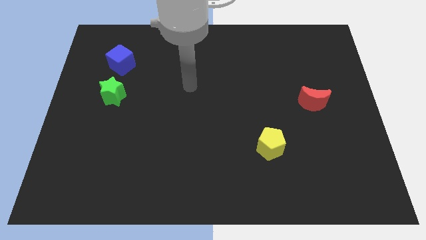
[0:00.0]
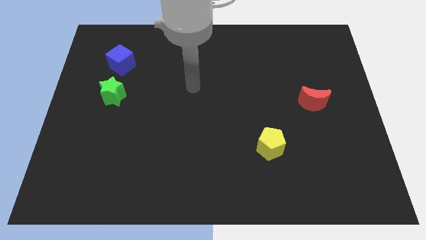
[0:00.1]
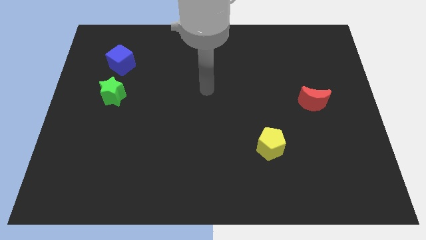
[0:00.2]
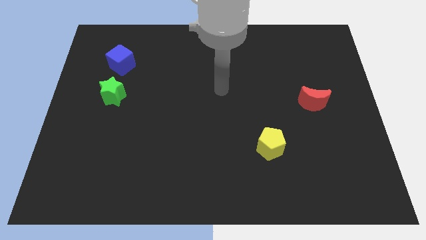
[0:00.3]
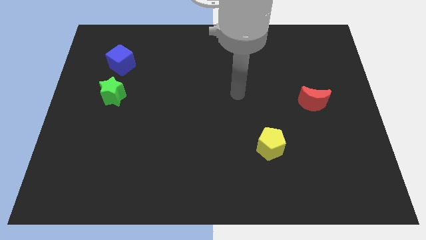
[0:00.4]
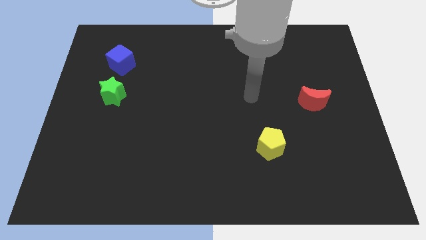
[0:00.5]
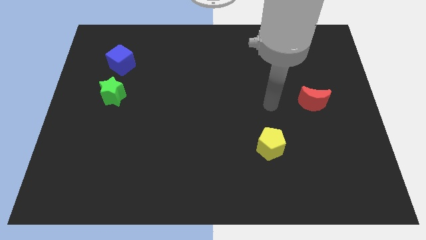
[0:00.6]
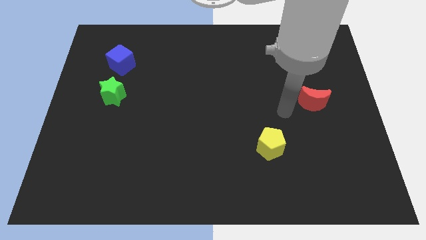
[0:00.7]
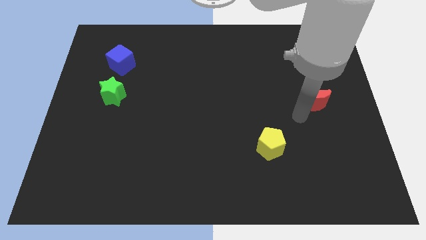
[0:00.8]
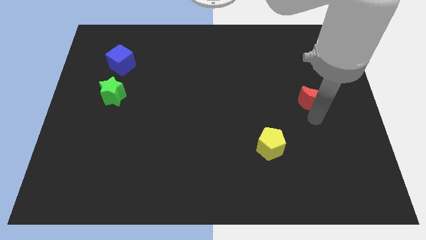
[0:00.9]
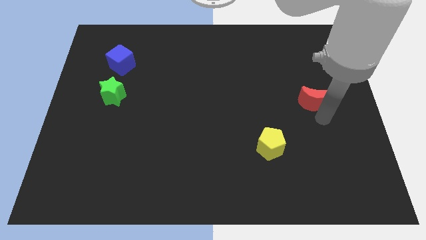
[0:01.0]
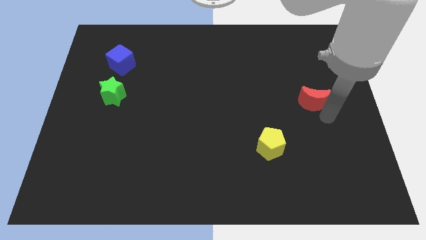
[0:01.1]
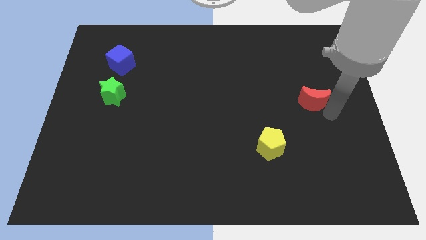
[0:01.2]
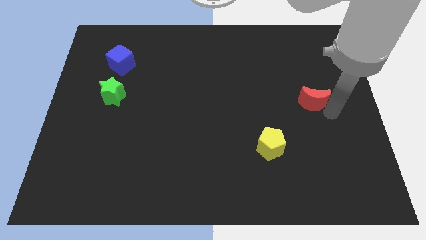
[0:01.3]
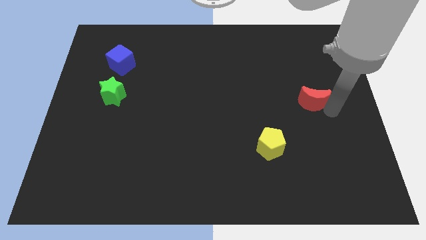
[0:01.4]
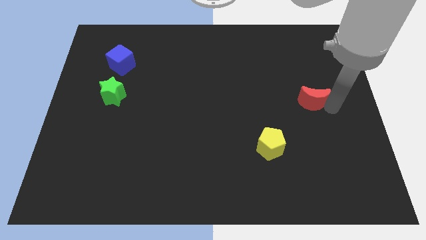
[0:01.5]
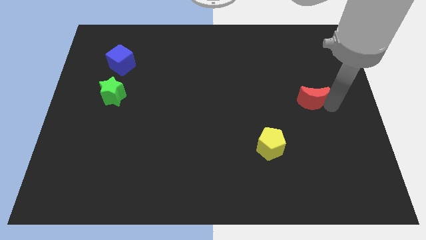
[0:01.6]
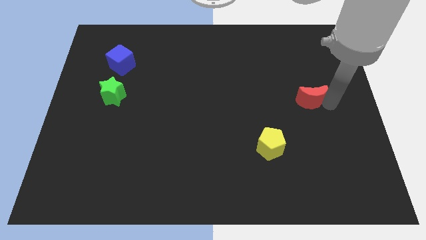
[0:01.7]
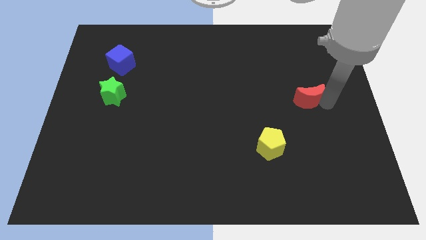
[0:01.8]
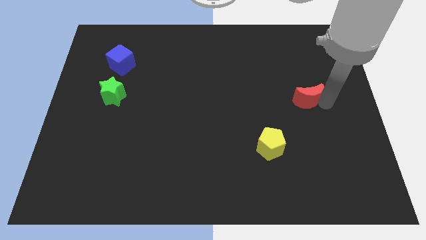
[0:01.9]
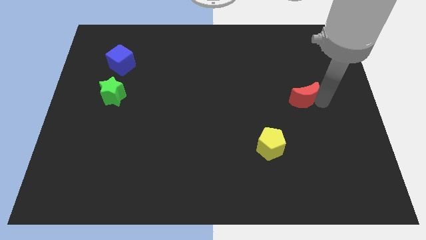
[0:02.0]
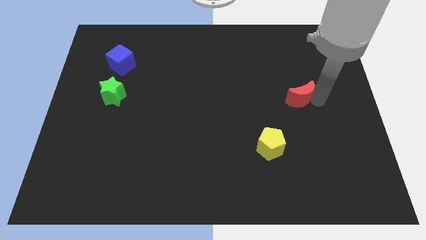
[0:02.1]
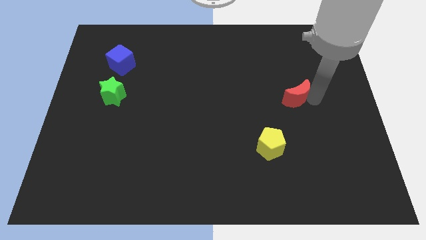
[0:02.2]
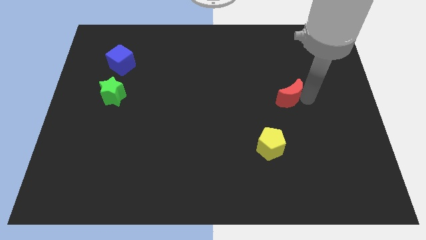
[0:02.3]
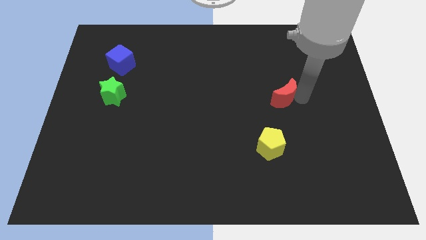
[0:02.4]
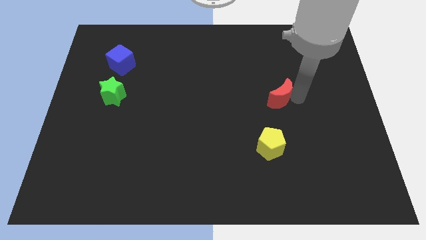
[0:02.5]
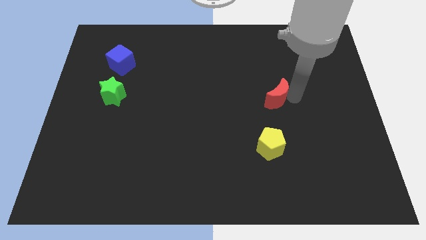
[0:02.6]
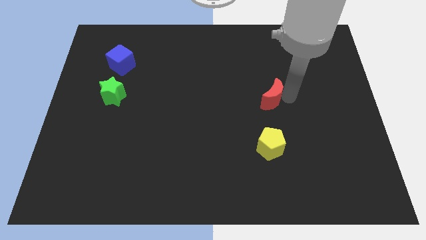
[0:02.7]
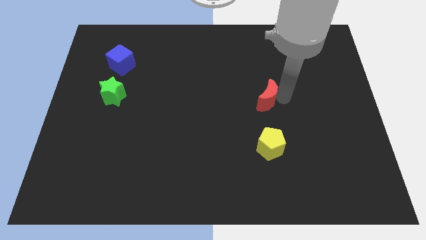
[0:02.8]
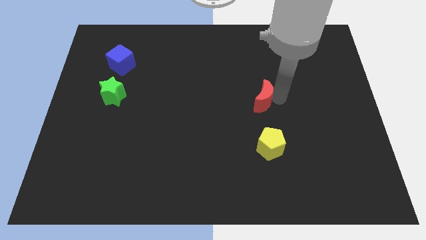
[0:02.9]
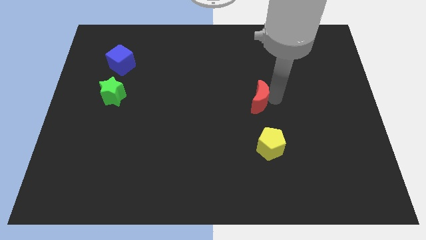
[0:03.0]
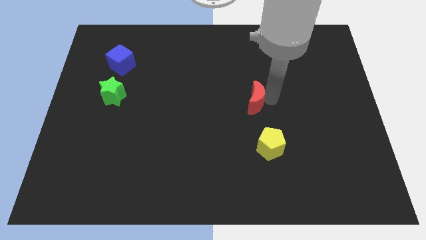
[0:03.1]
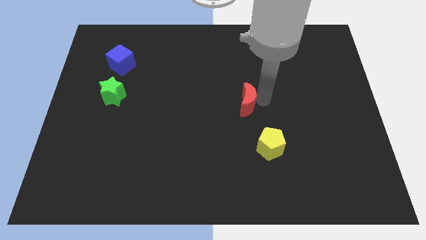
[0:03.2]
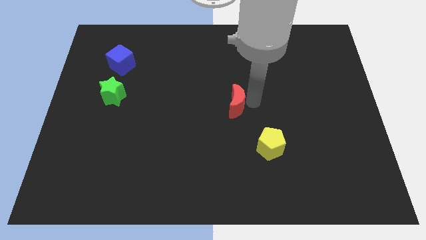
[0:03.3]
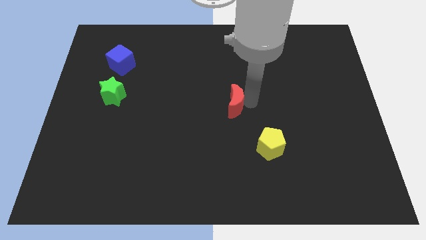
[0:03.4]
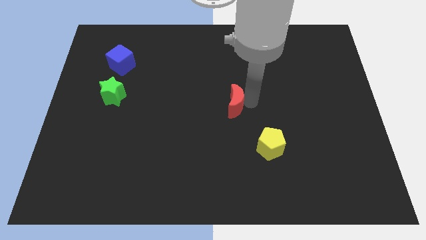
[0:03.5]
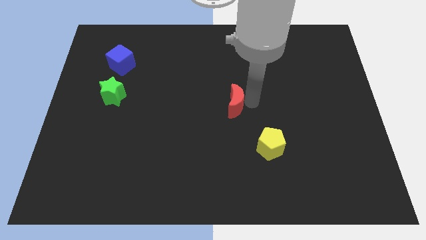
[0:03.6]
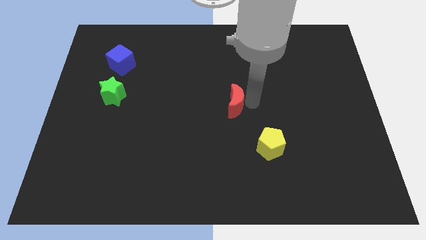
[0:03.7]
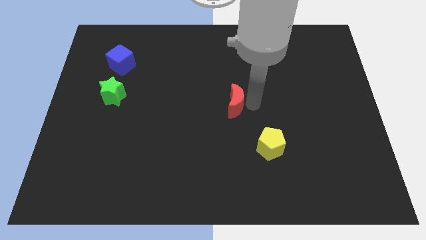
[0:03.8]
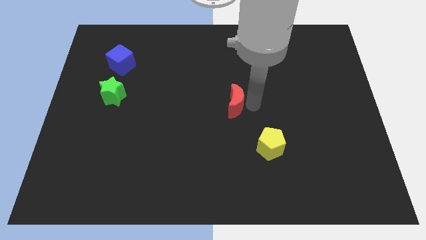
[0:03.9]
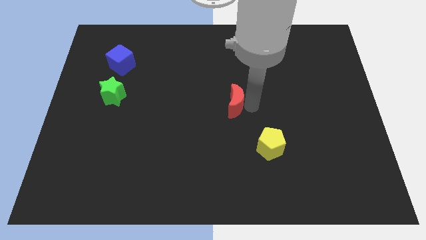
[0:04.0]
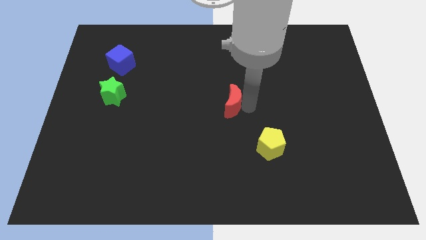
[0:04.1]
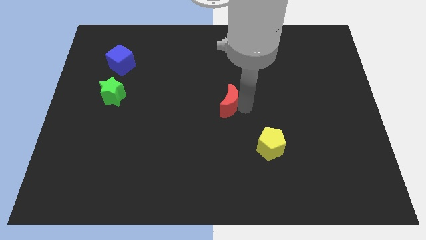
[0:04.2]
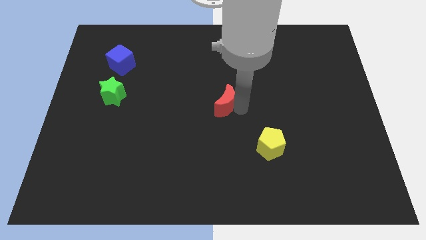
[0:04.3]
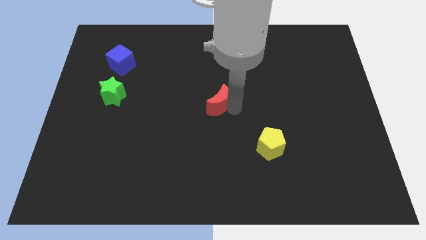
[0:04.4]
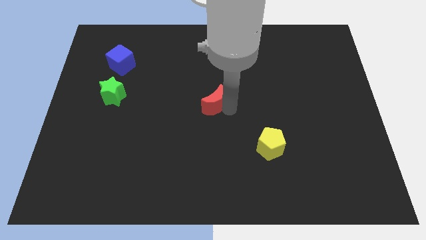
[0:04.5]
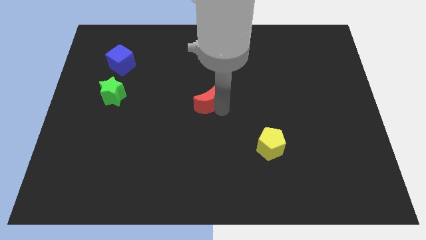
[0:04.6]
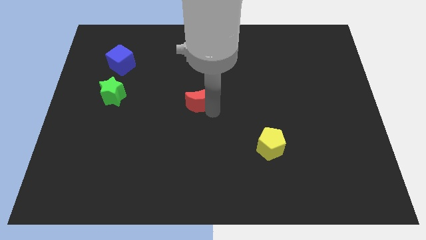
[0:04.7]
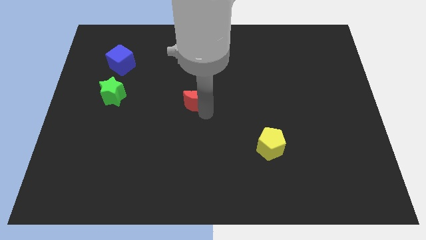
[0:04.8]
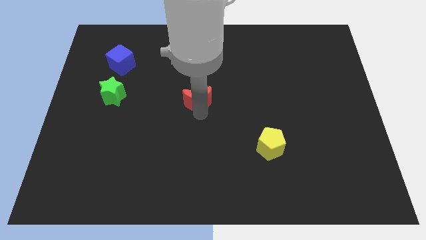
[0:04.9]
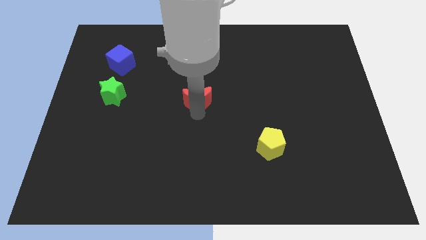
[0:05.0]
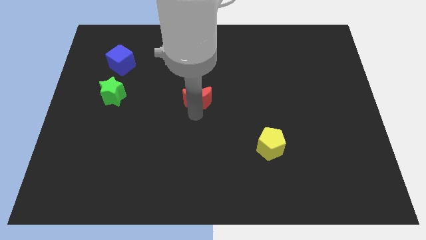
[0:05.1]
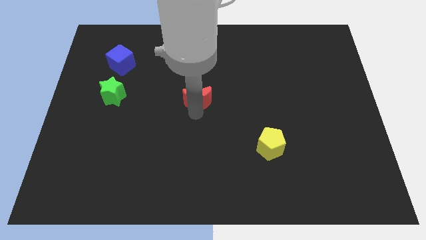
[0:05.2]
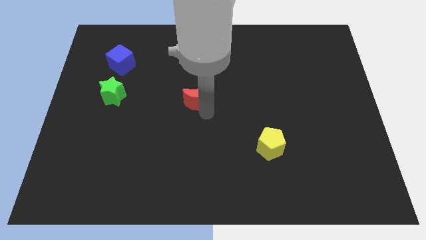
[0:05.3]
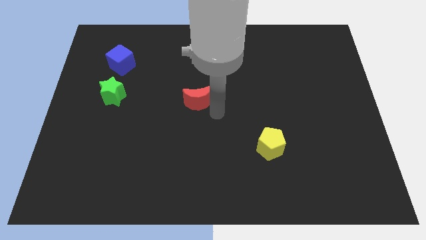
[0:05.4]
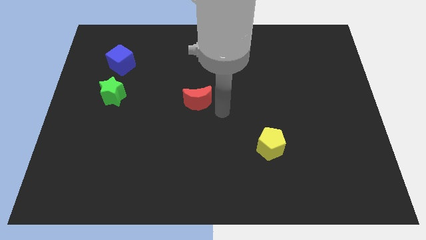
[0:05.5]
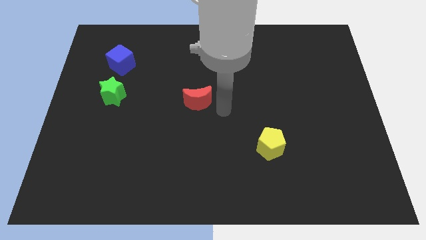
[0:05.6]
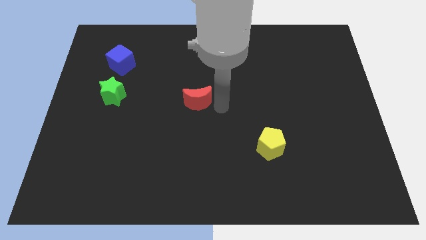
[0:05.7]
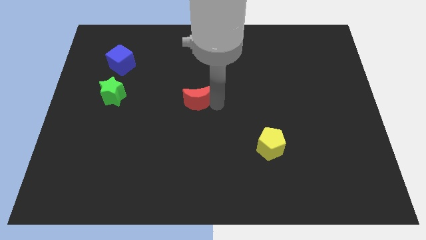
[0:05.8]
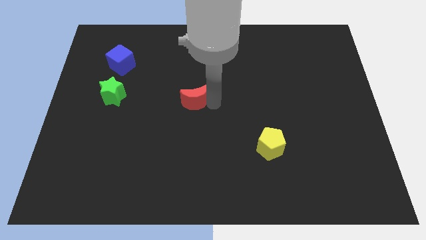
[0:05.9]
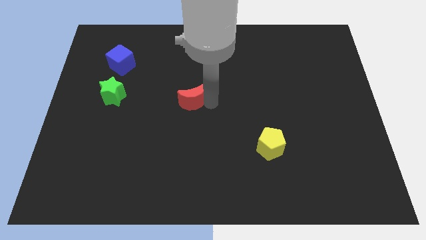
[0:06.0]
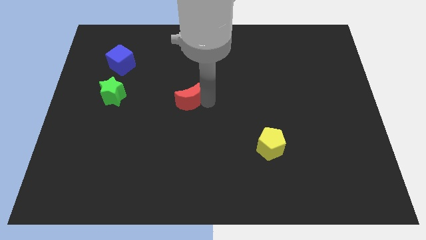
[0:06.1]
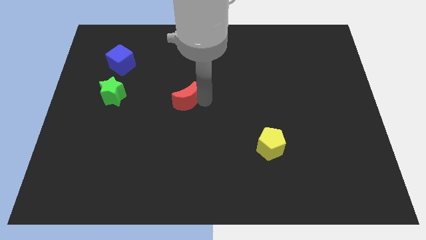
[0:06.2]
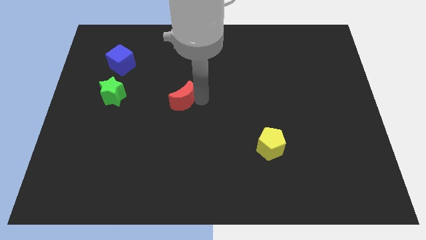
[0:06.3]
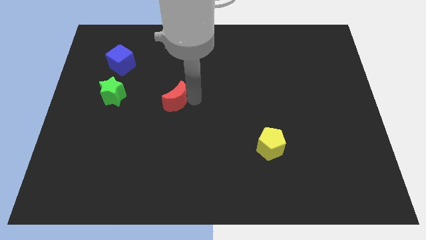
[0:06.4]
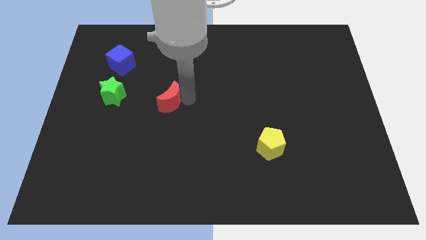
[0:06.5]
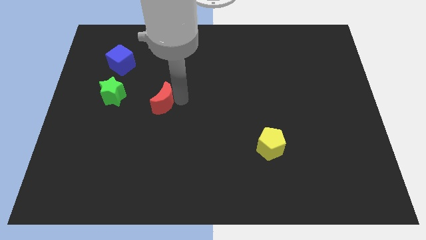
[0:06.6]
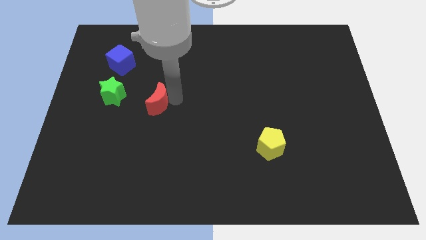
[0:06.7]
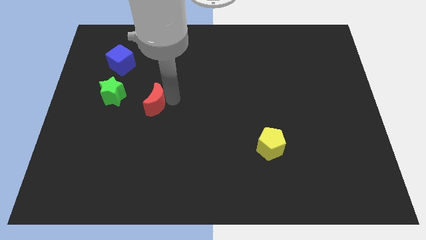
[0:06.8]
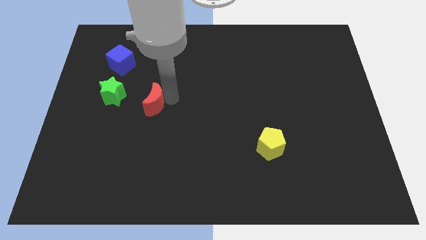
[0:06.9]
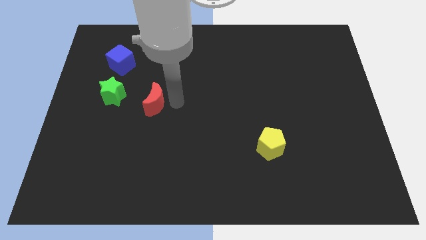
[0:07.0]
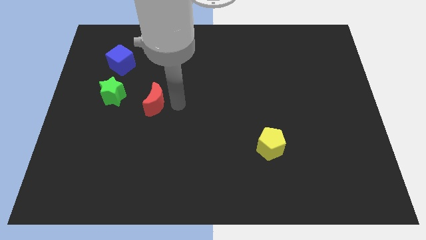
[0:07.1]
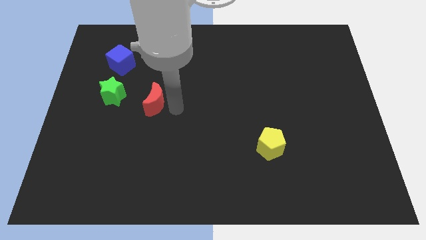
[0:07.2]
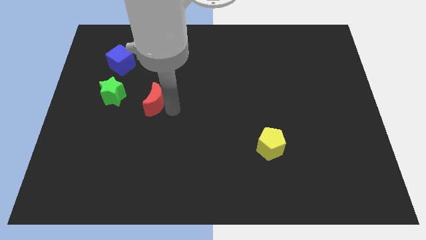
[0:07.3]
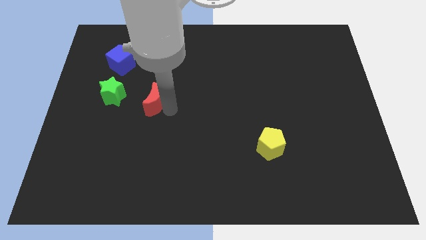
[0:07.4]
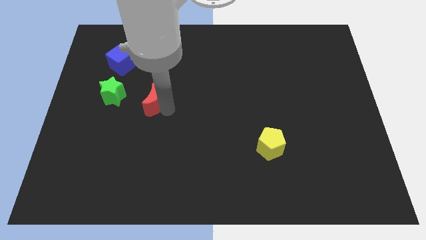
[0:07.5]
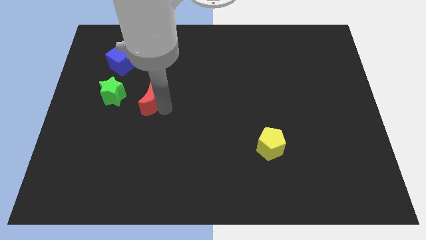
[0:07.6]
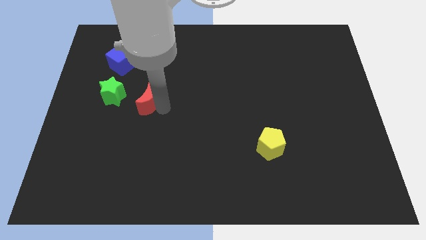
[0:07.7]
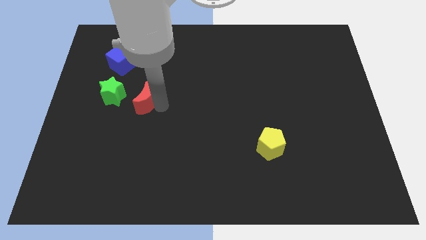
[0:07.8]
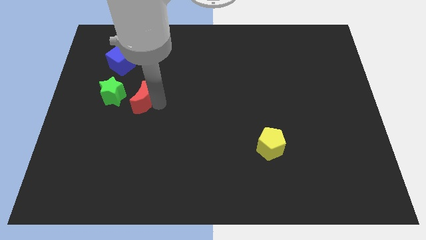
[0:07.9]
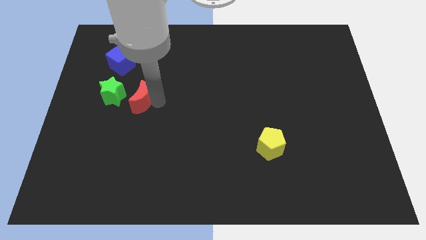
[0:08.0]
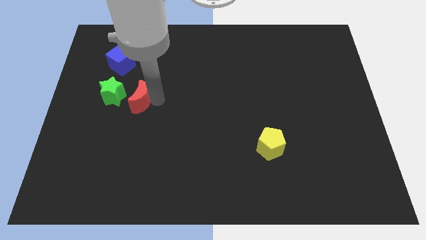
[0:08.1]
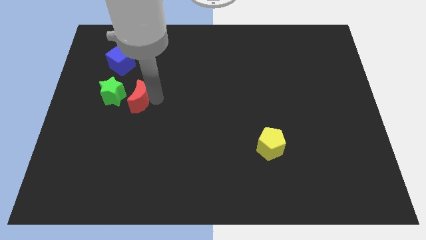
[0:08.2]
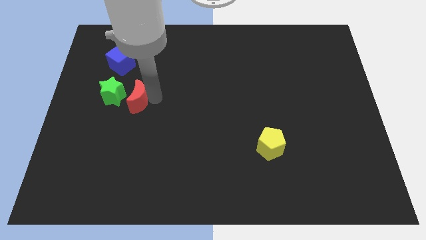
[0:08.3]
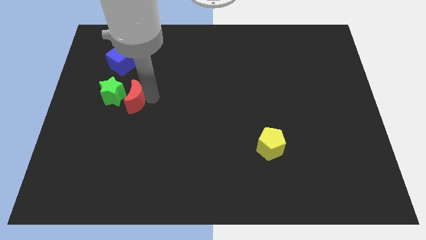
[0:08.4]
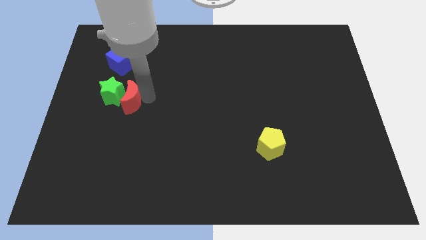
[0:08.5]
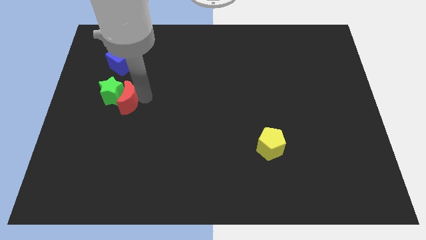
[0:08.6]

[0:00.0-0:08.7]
move the red block close to the green block
